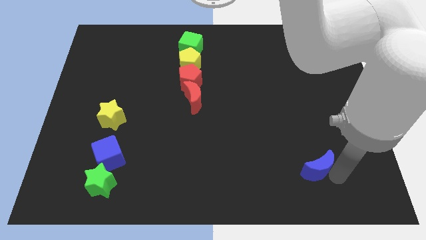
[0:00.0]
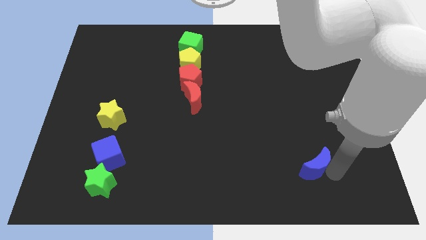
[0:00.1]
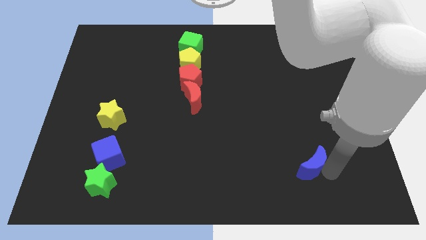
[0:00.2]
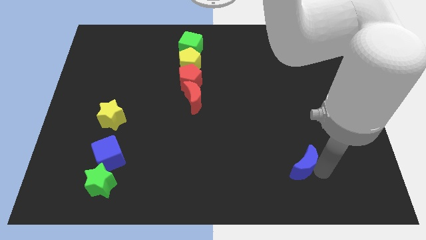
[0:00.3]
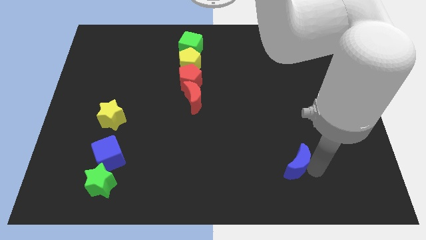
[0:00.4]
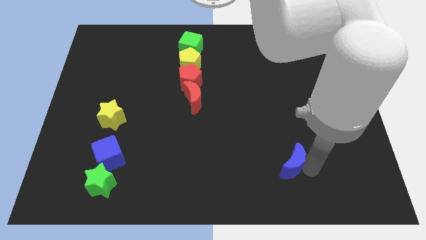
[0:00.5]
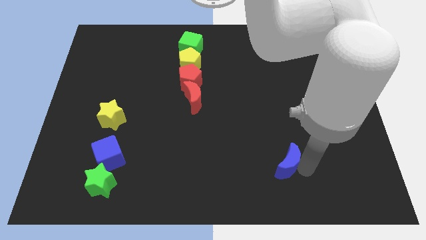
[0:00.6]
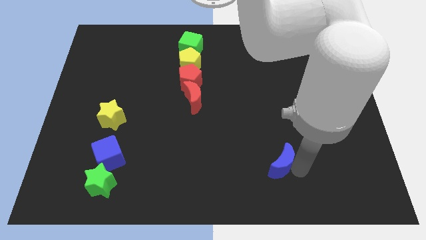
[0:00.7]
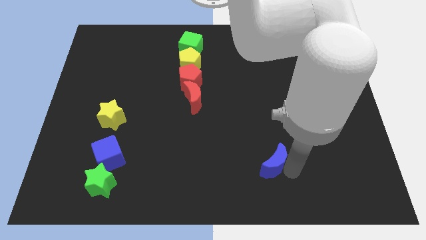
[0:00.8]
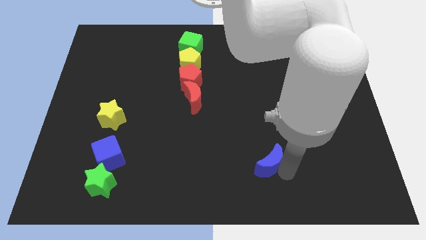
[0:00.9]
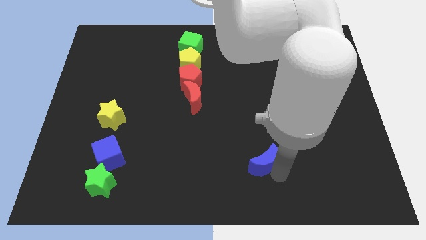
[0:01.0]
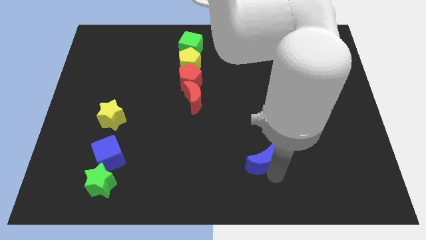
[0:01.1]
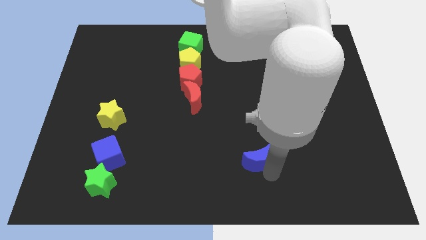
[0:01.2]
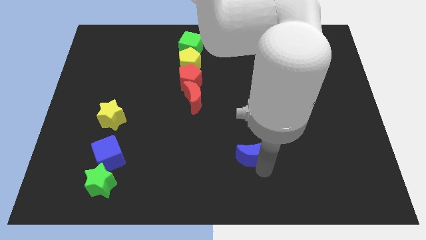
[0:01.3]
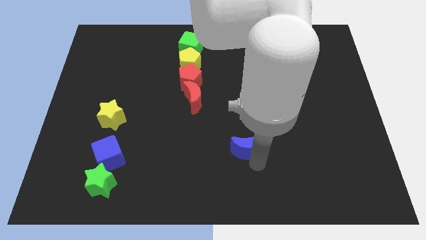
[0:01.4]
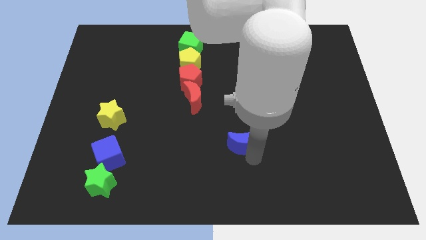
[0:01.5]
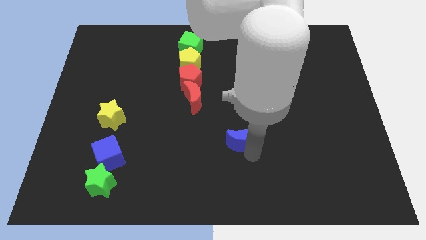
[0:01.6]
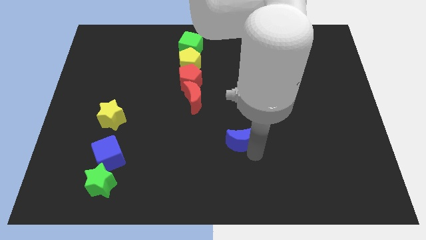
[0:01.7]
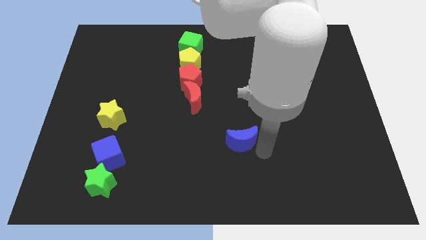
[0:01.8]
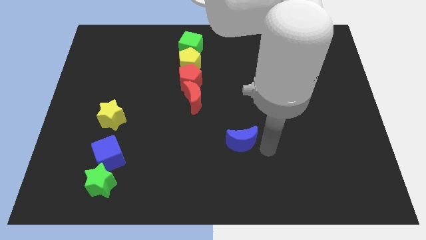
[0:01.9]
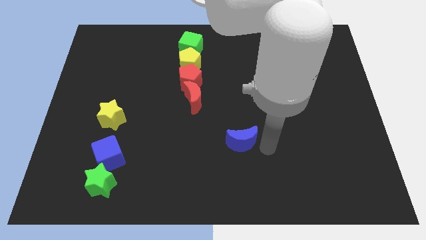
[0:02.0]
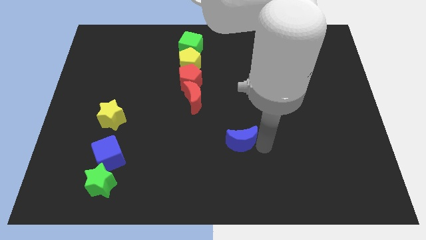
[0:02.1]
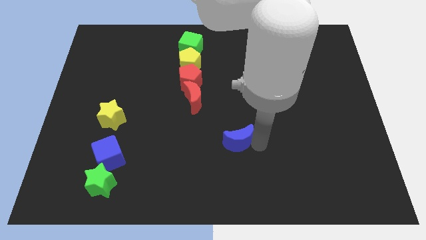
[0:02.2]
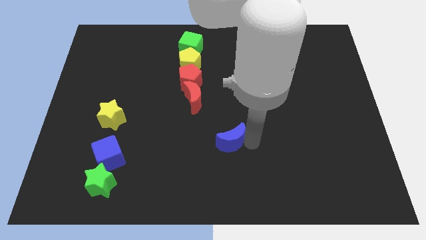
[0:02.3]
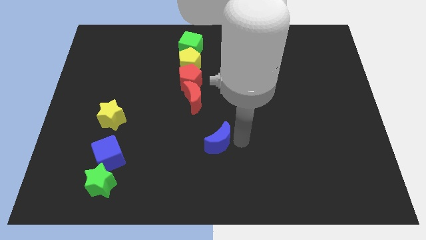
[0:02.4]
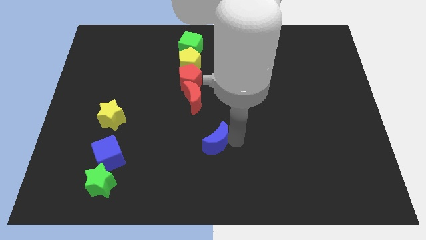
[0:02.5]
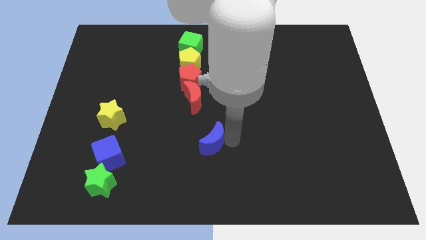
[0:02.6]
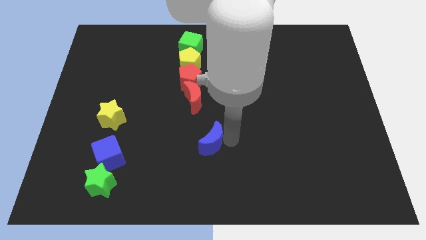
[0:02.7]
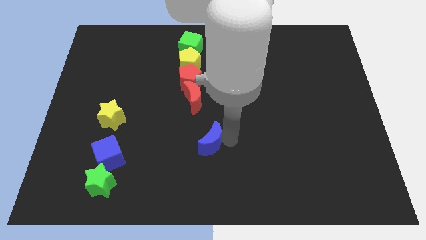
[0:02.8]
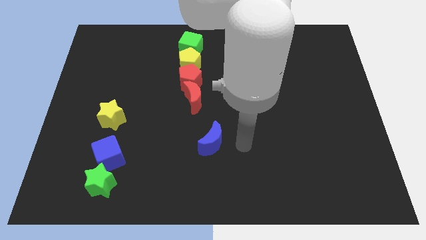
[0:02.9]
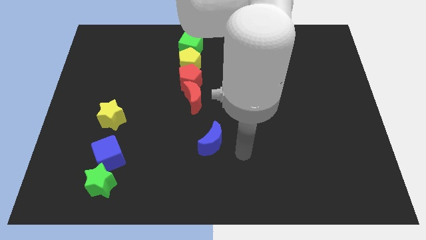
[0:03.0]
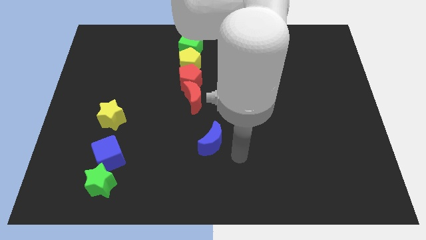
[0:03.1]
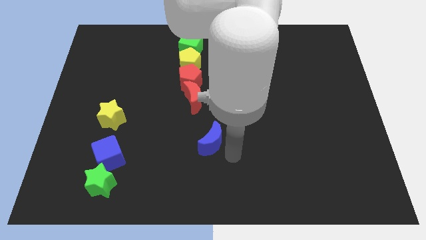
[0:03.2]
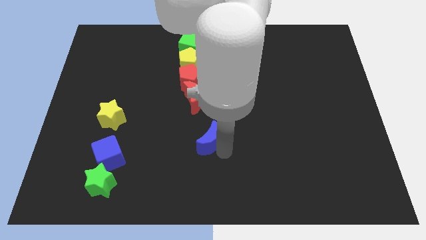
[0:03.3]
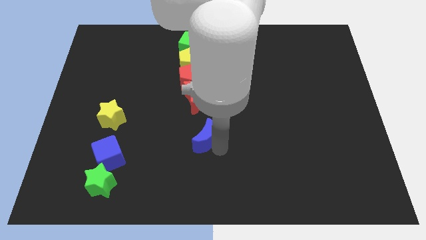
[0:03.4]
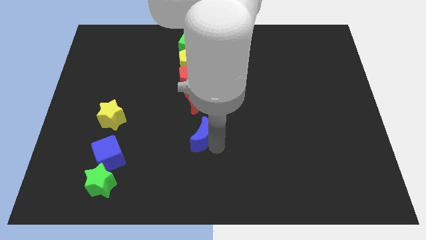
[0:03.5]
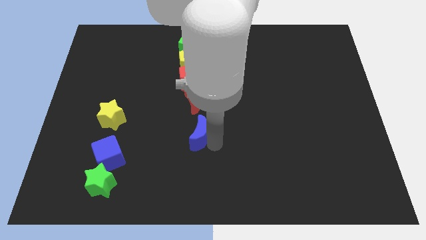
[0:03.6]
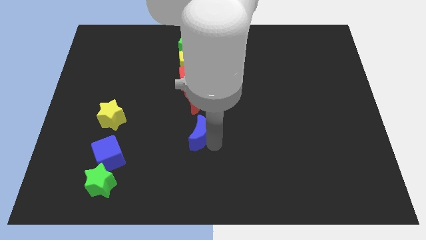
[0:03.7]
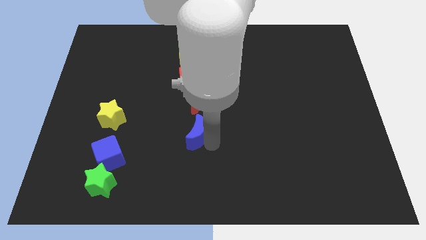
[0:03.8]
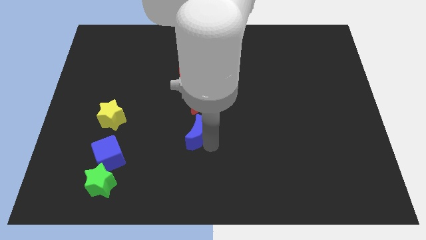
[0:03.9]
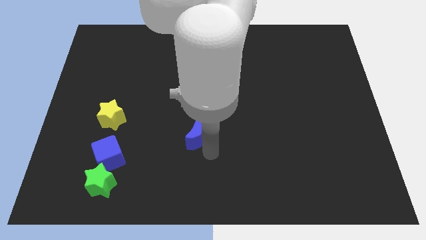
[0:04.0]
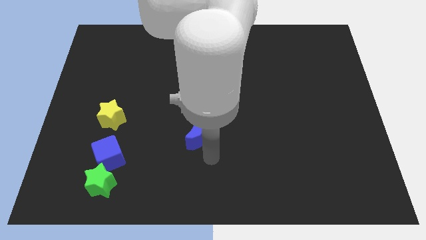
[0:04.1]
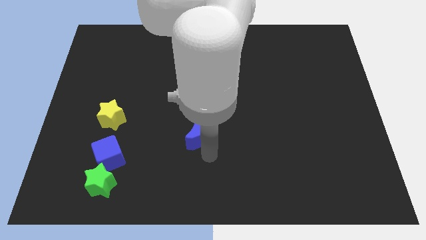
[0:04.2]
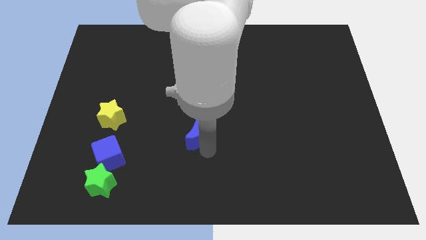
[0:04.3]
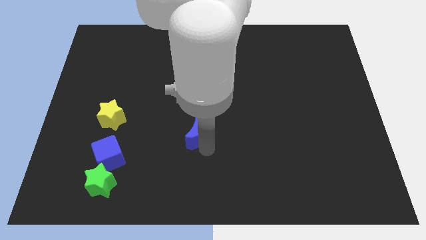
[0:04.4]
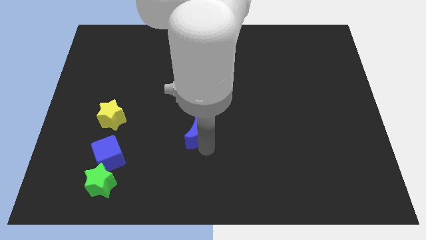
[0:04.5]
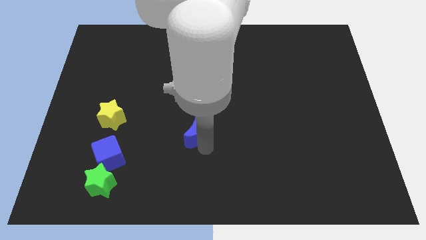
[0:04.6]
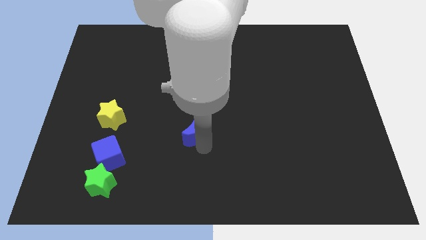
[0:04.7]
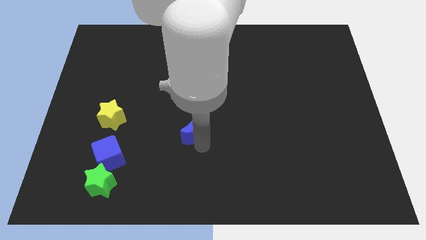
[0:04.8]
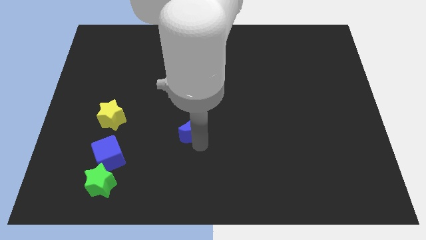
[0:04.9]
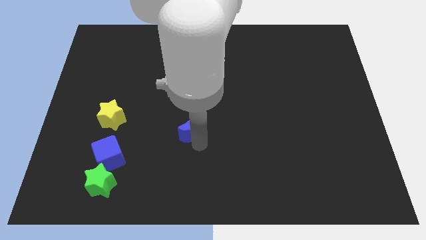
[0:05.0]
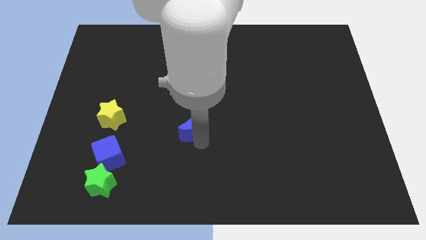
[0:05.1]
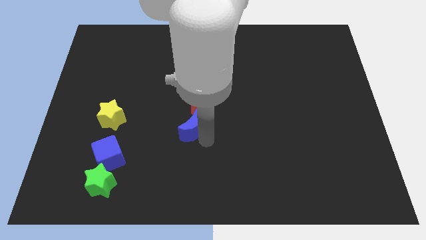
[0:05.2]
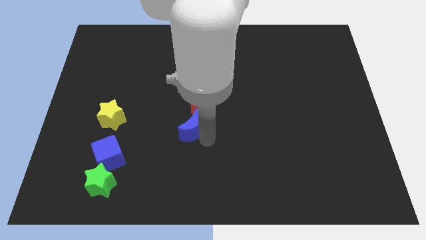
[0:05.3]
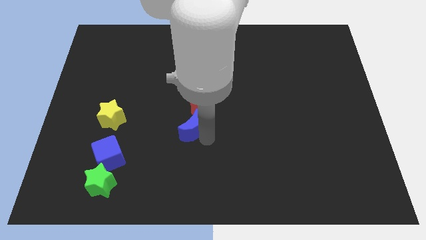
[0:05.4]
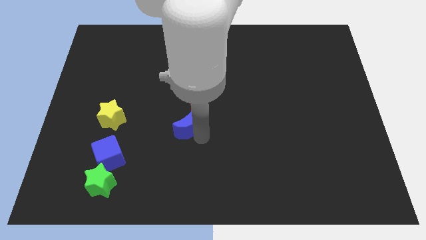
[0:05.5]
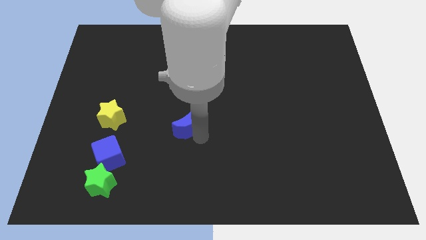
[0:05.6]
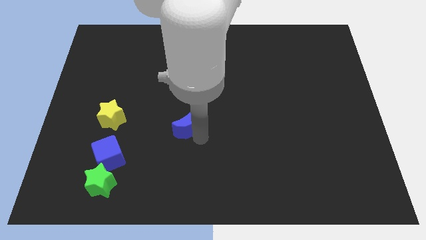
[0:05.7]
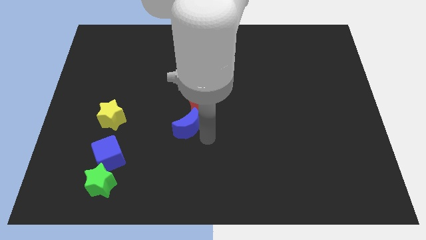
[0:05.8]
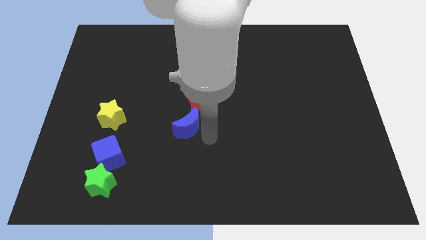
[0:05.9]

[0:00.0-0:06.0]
push the blue moon down to the red moon

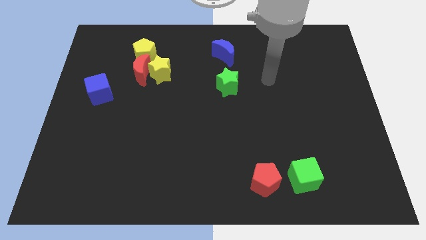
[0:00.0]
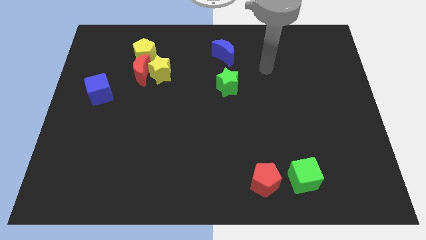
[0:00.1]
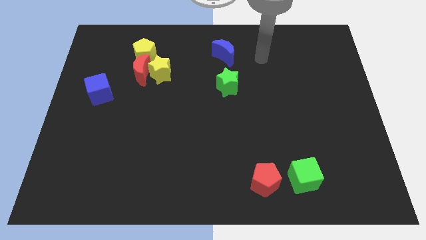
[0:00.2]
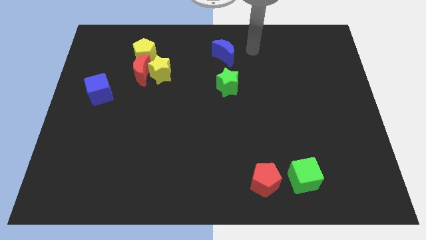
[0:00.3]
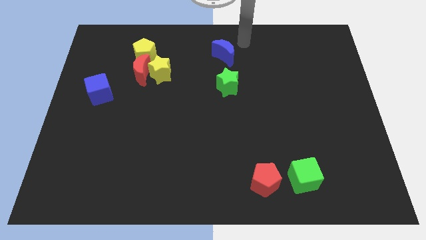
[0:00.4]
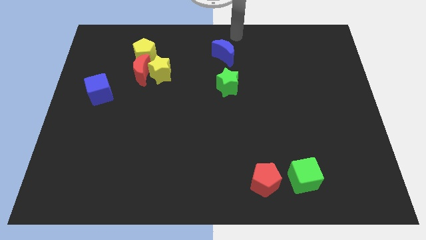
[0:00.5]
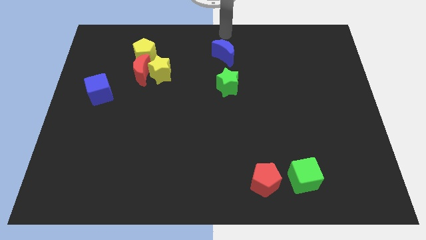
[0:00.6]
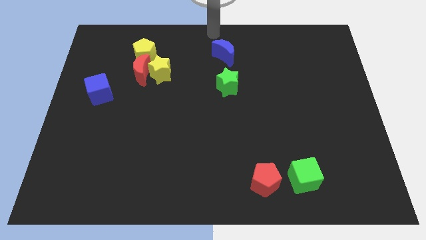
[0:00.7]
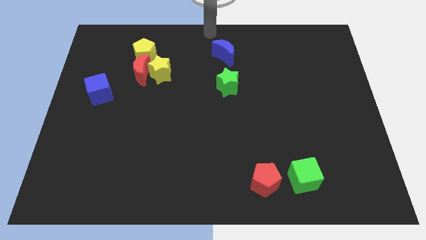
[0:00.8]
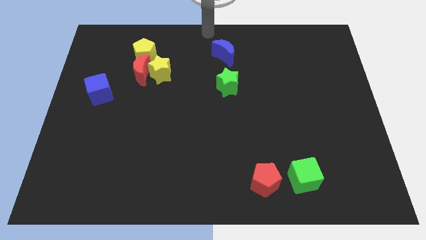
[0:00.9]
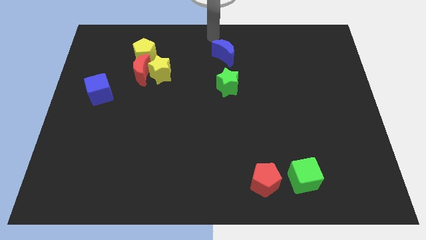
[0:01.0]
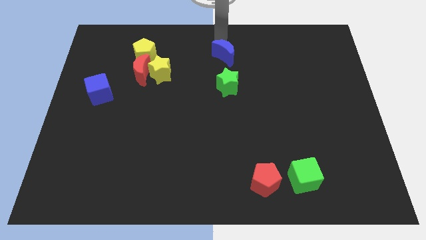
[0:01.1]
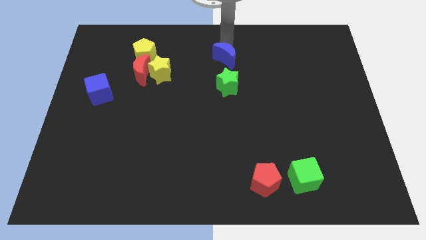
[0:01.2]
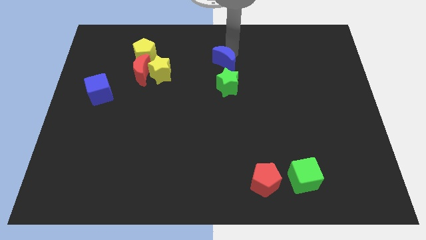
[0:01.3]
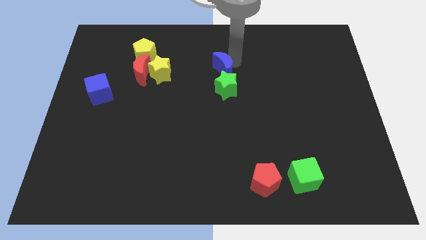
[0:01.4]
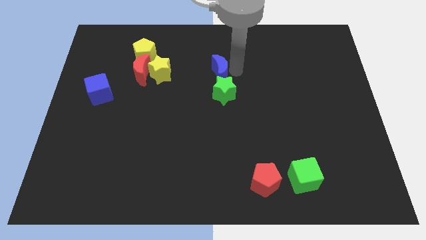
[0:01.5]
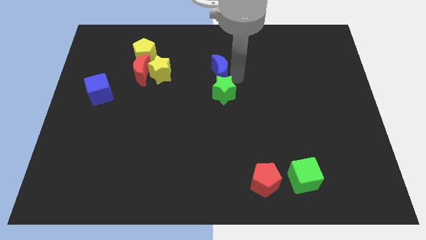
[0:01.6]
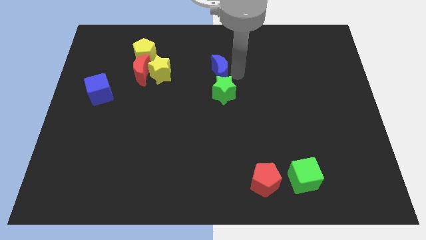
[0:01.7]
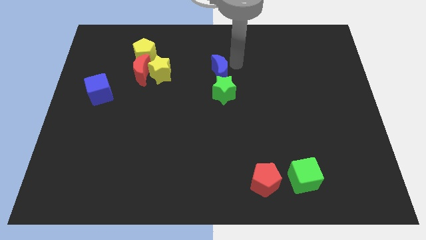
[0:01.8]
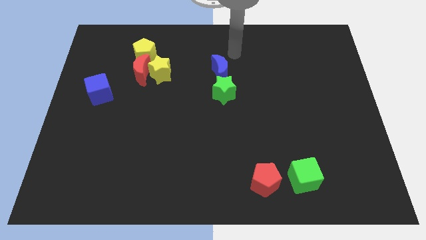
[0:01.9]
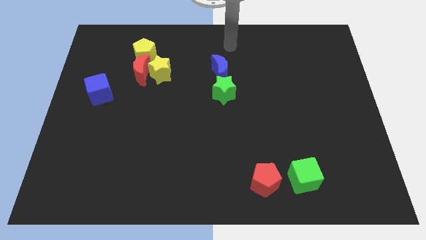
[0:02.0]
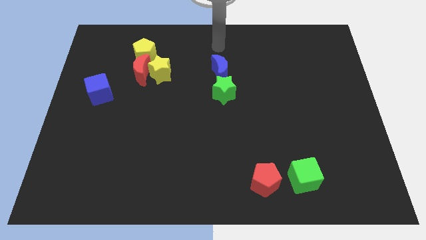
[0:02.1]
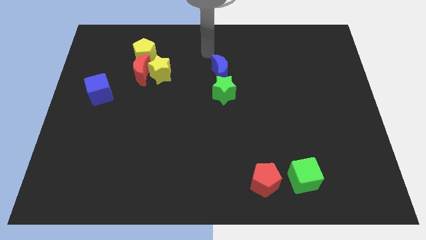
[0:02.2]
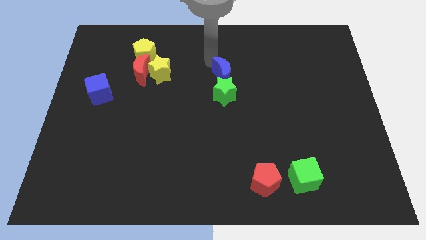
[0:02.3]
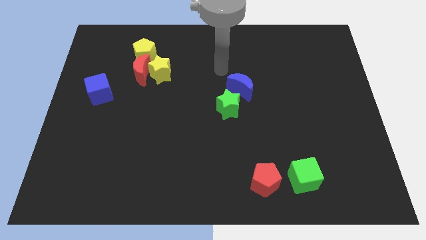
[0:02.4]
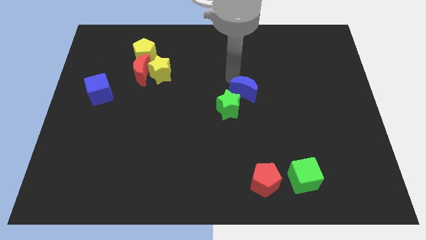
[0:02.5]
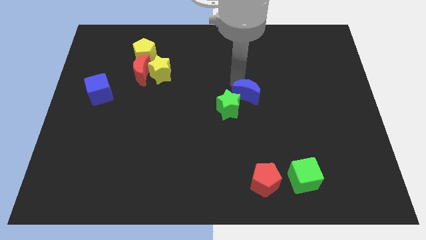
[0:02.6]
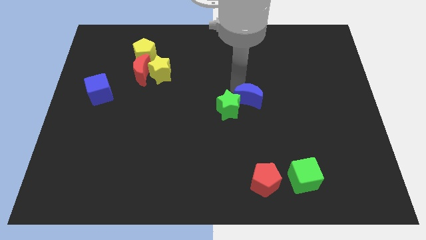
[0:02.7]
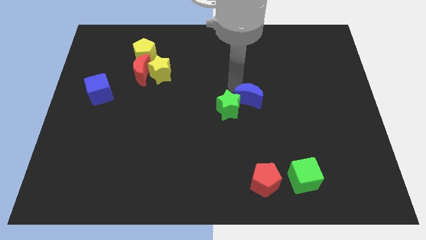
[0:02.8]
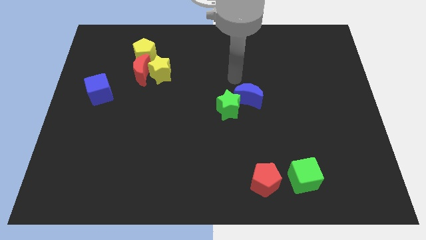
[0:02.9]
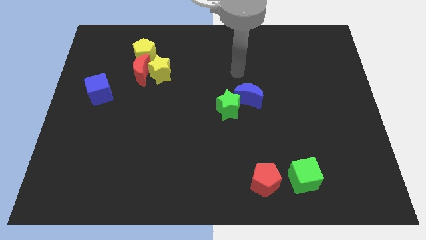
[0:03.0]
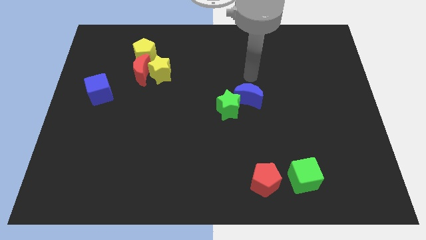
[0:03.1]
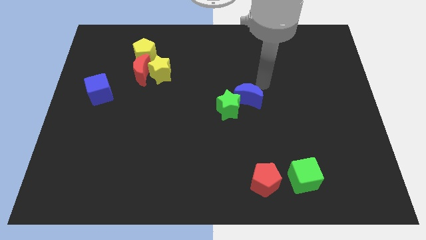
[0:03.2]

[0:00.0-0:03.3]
push the blue crescent and green star to the center of the board
